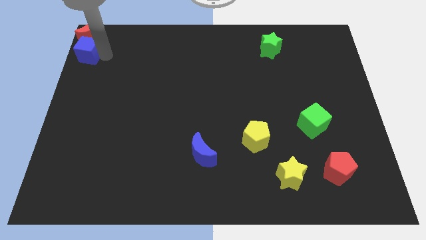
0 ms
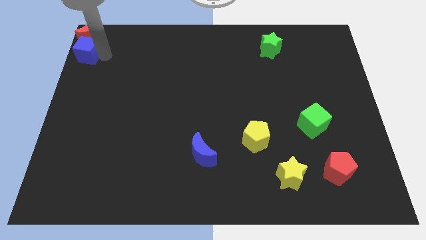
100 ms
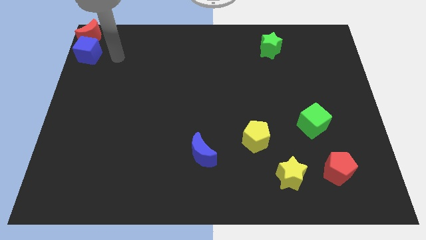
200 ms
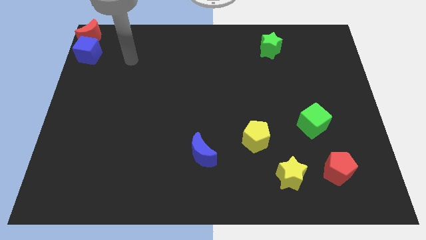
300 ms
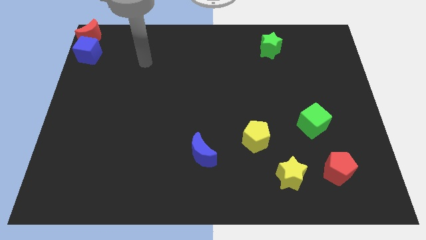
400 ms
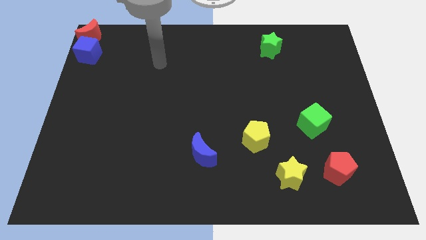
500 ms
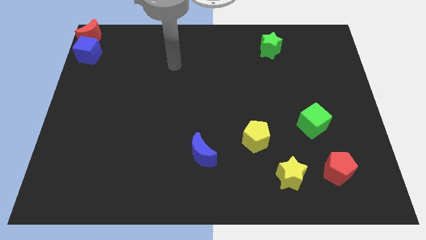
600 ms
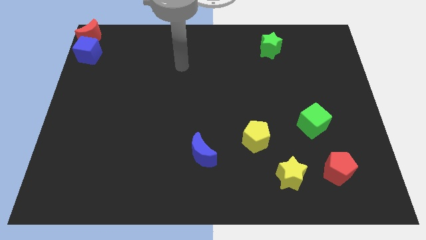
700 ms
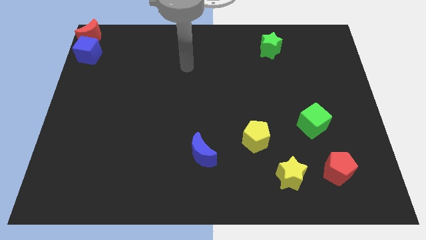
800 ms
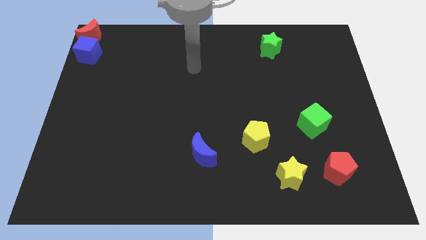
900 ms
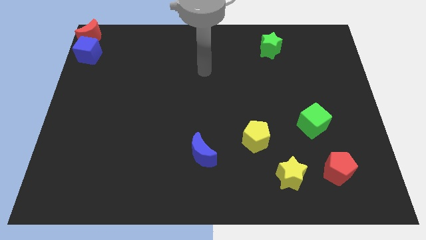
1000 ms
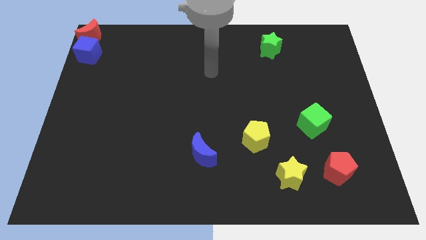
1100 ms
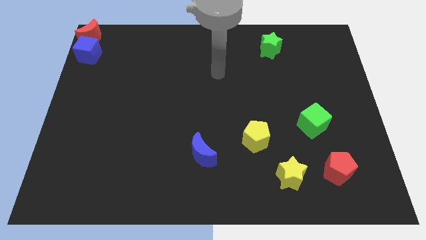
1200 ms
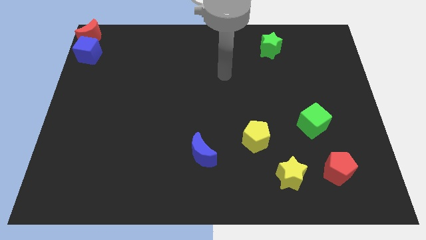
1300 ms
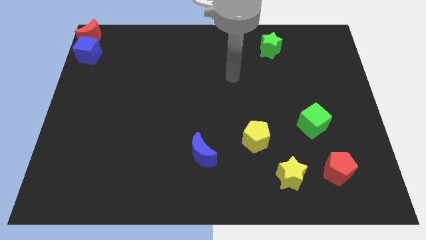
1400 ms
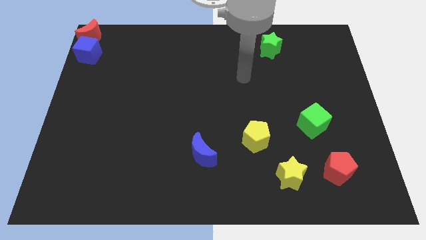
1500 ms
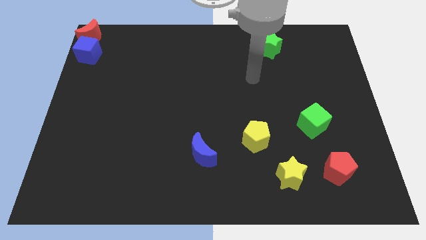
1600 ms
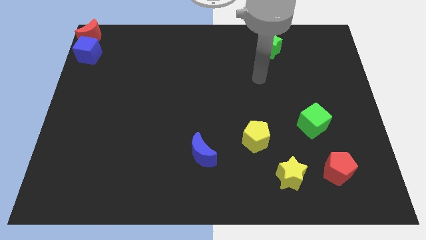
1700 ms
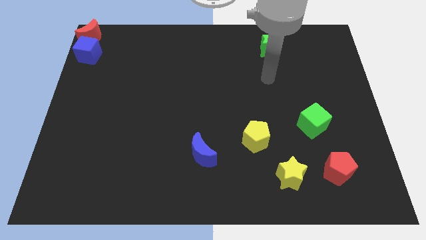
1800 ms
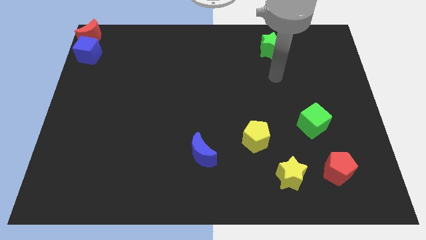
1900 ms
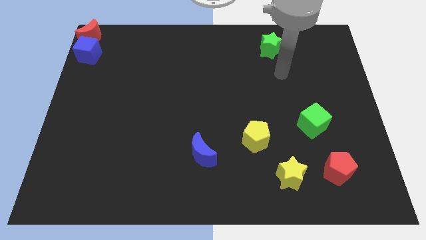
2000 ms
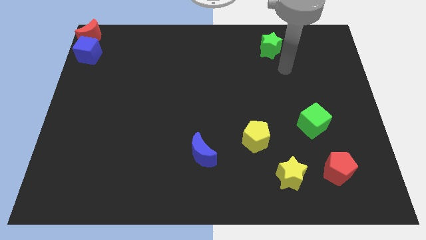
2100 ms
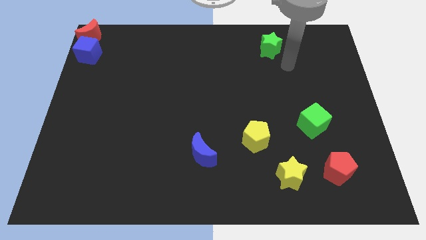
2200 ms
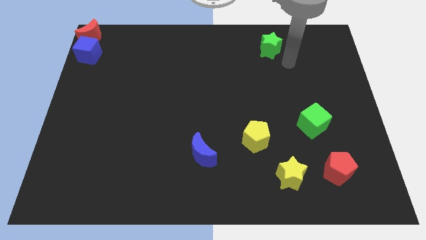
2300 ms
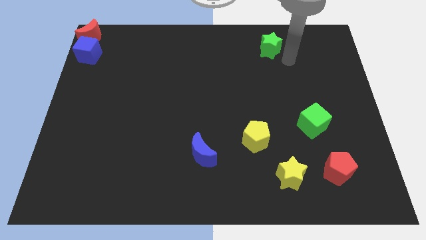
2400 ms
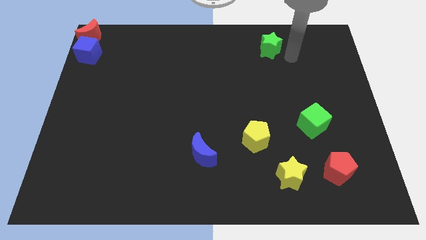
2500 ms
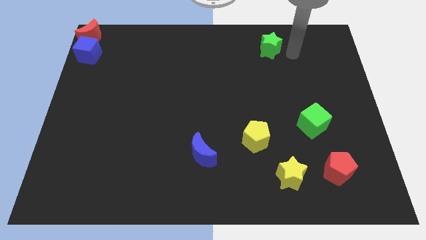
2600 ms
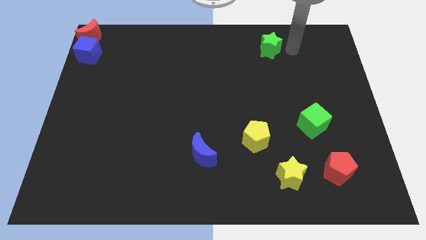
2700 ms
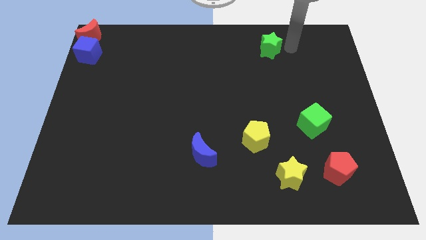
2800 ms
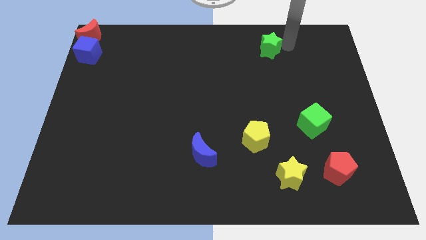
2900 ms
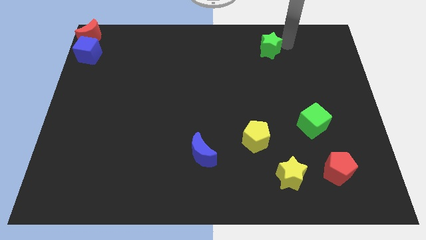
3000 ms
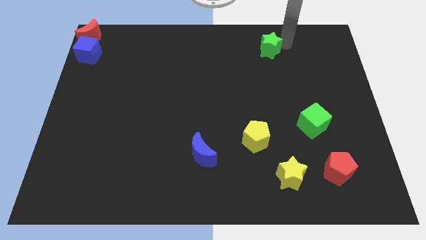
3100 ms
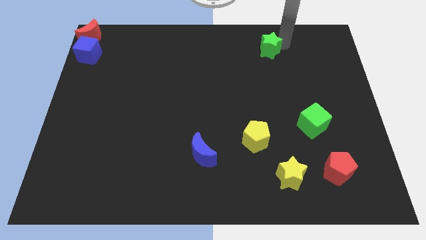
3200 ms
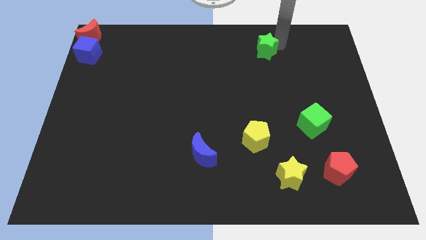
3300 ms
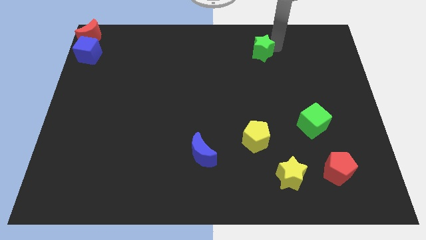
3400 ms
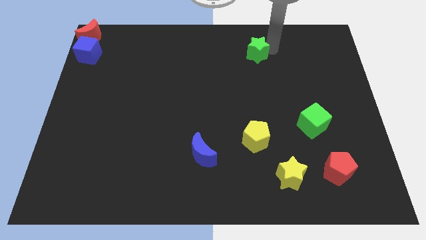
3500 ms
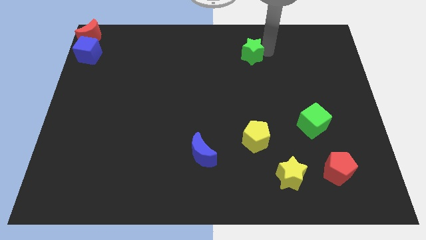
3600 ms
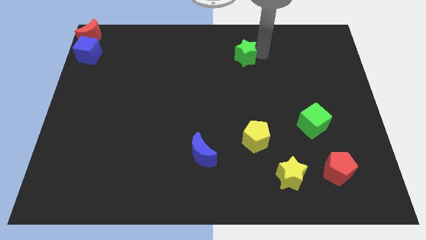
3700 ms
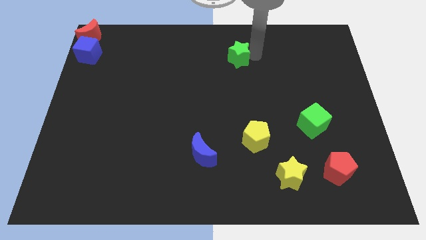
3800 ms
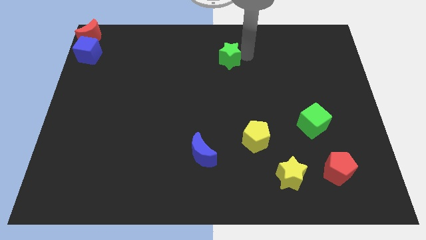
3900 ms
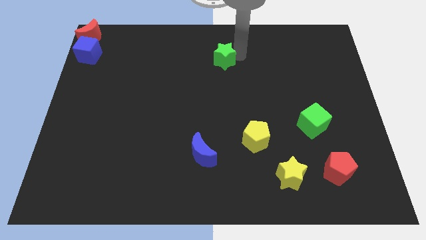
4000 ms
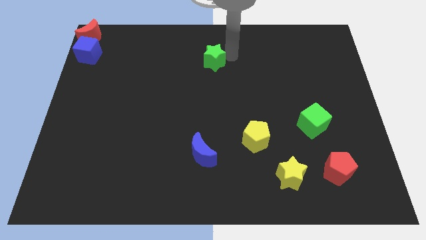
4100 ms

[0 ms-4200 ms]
place the green star above the yellow pentagon

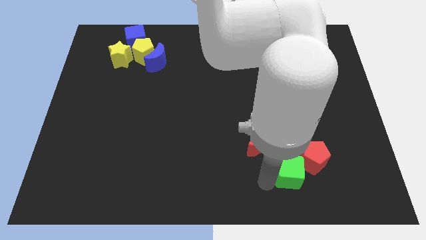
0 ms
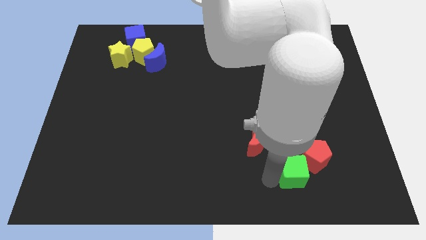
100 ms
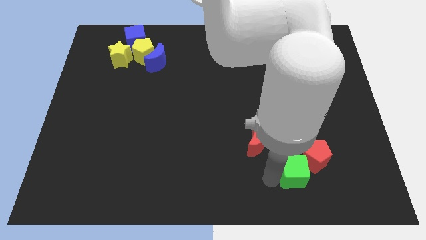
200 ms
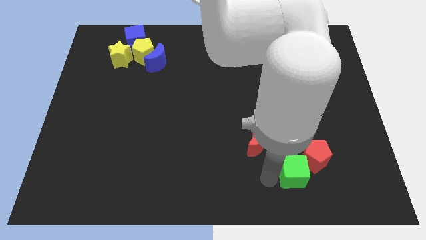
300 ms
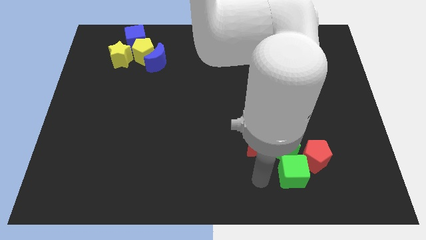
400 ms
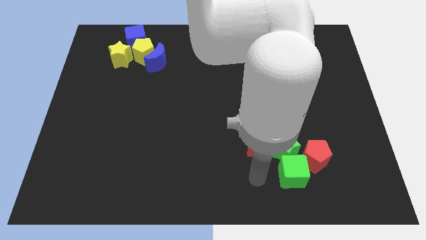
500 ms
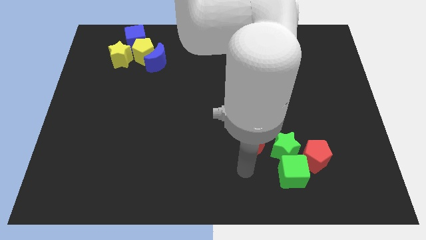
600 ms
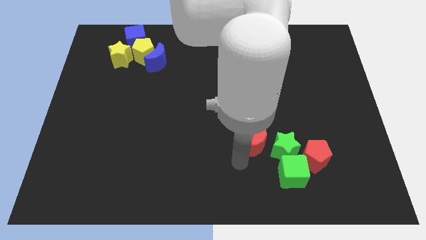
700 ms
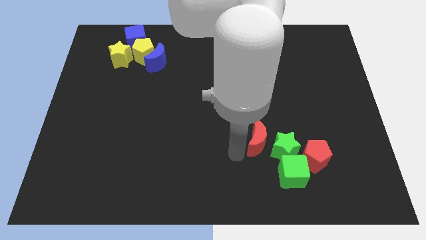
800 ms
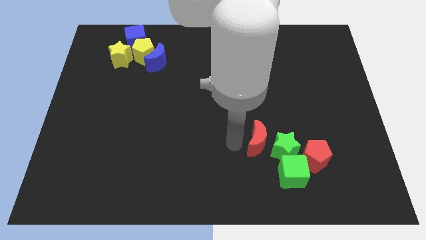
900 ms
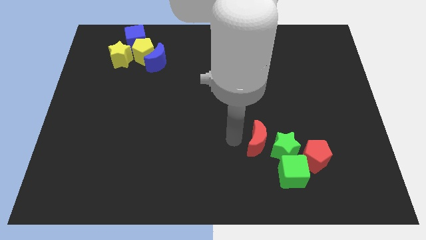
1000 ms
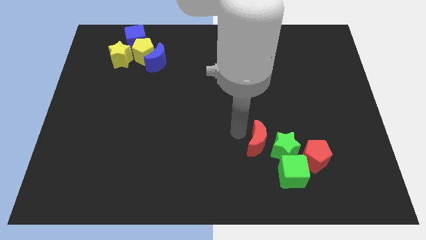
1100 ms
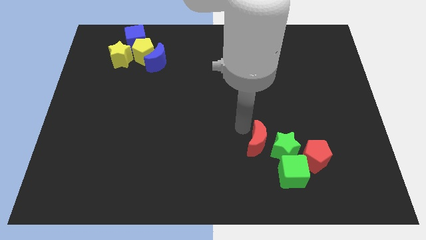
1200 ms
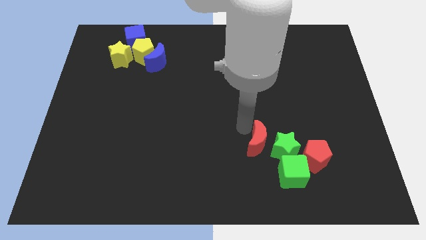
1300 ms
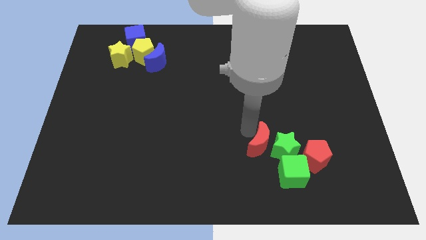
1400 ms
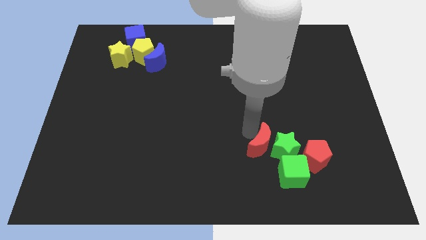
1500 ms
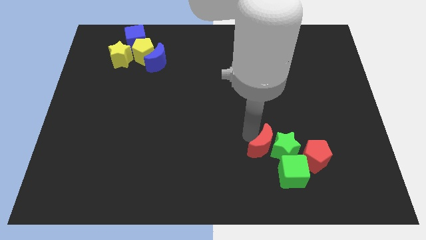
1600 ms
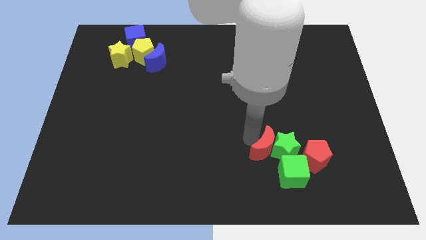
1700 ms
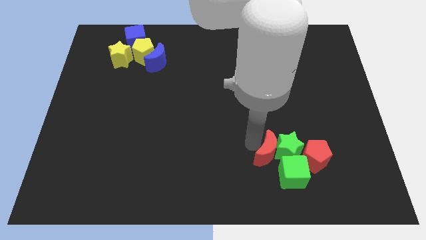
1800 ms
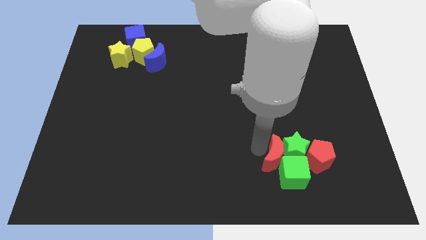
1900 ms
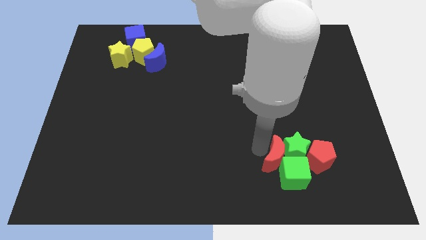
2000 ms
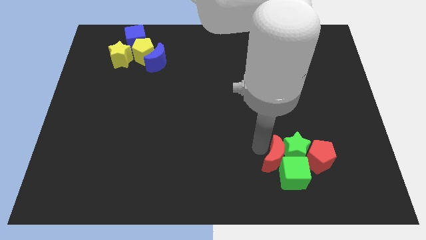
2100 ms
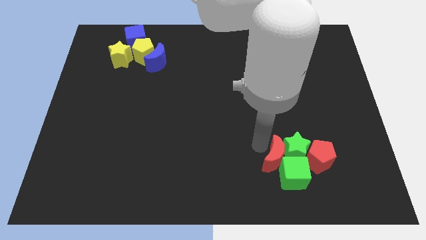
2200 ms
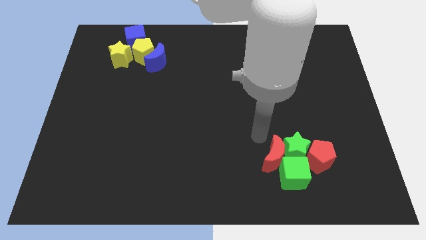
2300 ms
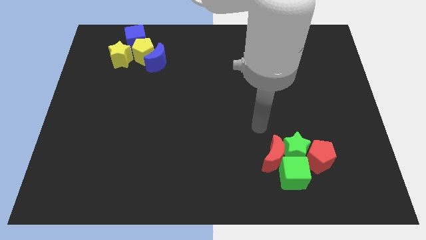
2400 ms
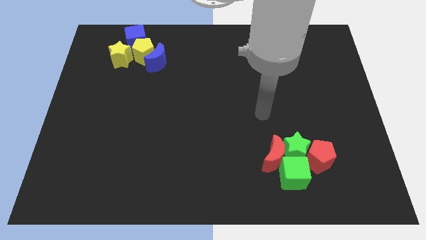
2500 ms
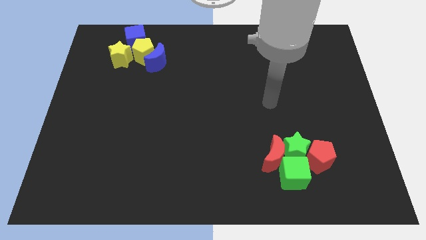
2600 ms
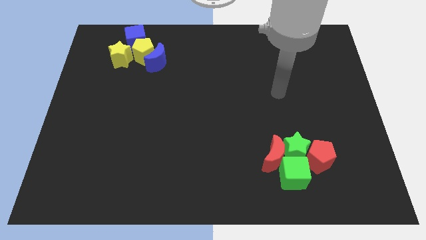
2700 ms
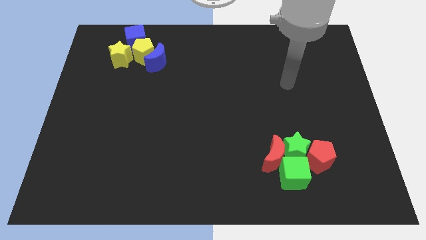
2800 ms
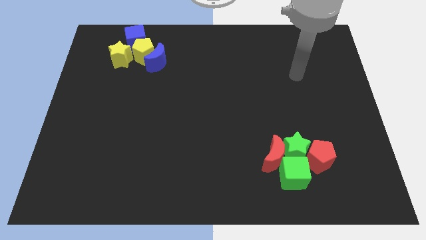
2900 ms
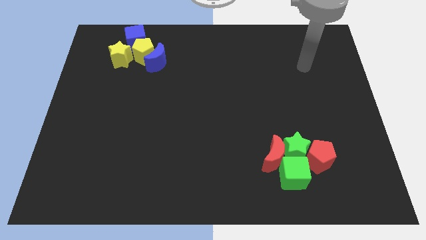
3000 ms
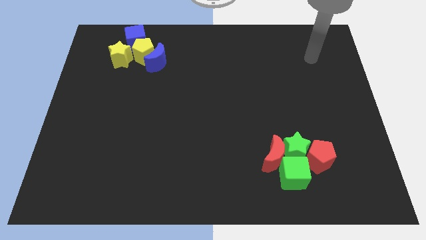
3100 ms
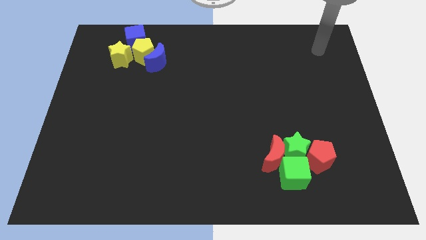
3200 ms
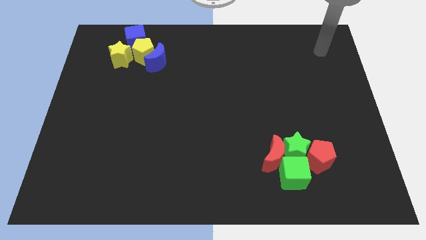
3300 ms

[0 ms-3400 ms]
push the red crescent and green cube together

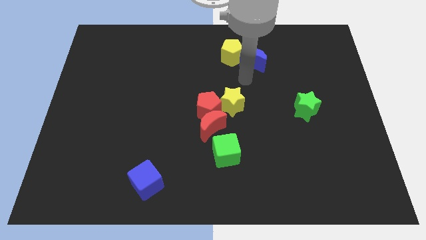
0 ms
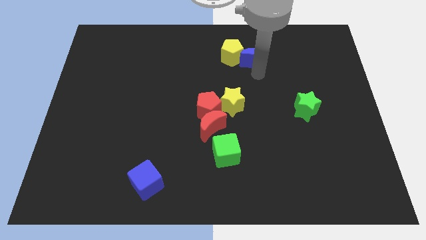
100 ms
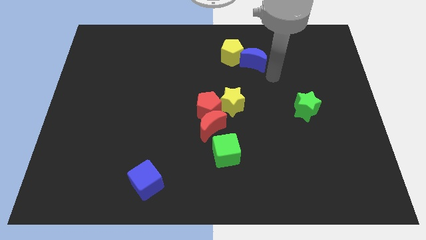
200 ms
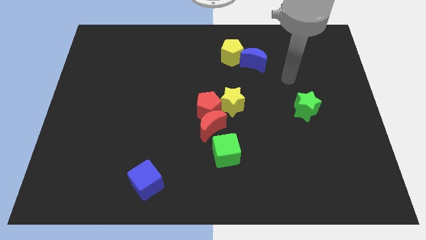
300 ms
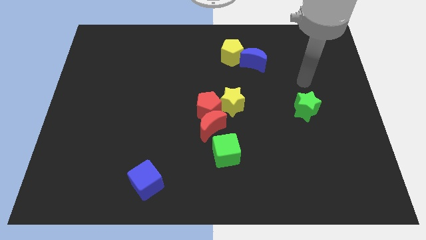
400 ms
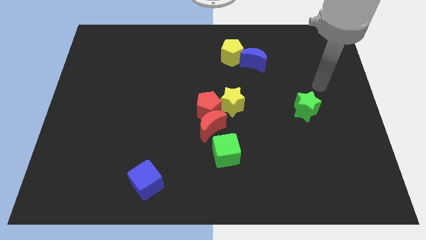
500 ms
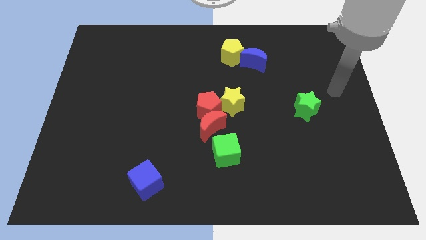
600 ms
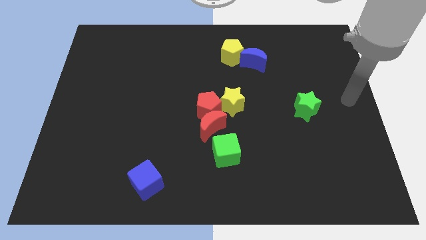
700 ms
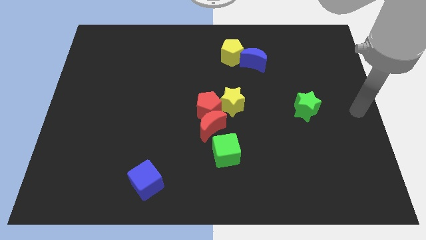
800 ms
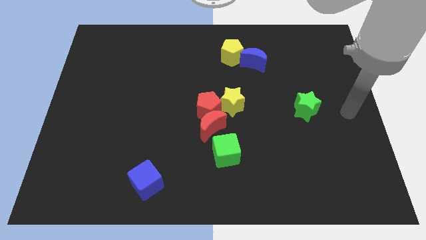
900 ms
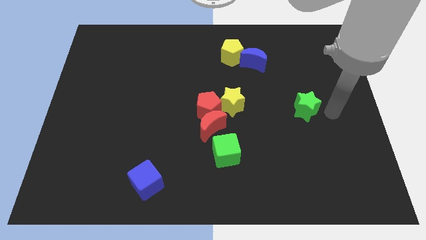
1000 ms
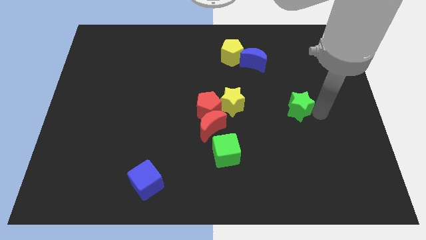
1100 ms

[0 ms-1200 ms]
move arm towards green star

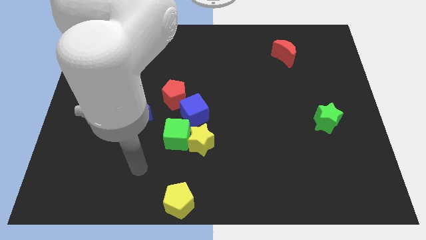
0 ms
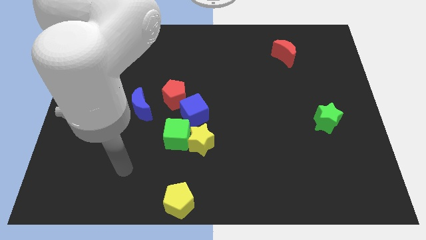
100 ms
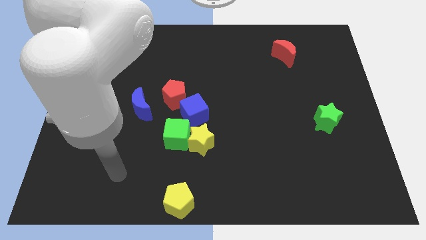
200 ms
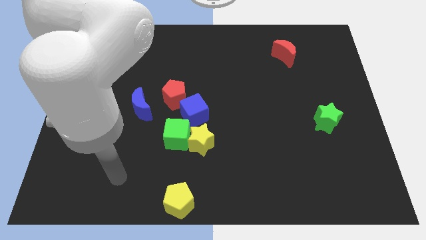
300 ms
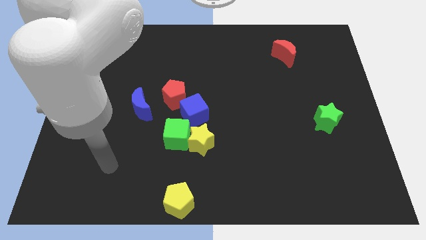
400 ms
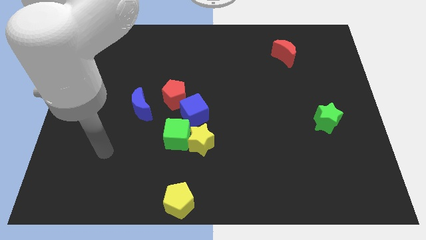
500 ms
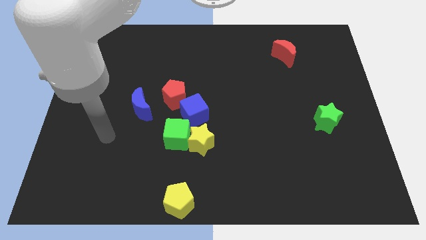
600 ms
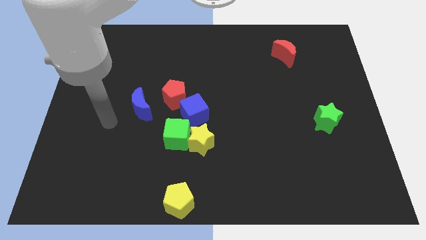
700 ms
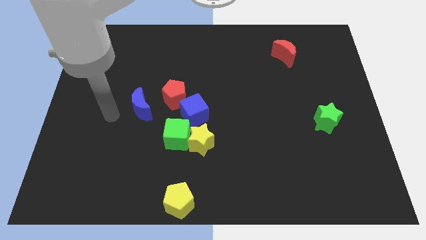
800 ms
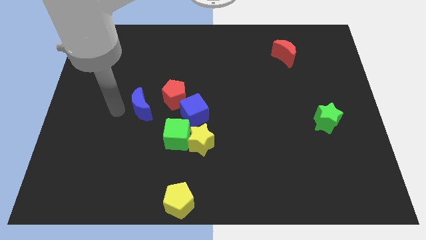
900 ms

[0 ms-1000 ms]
go away from the yellow pentagon
